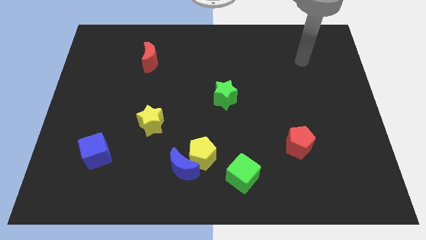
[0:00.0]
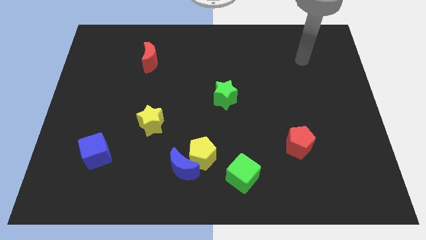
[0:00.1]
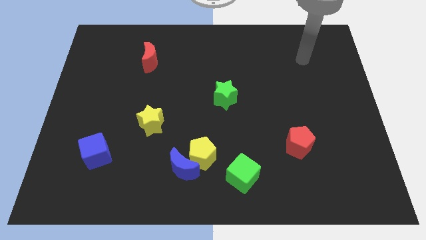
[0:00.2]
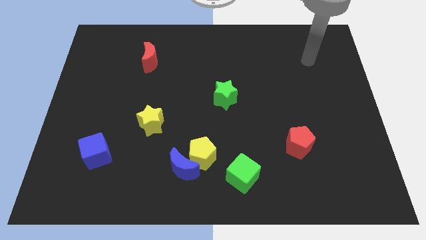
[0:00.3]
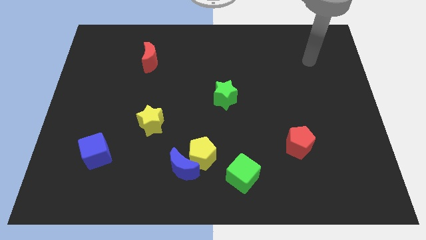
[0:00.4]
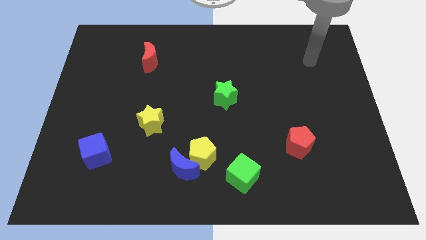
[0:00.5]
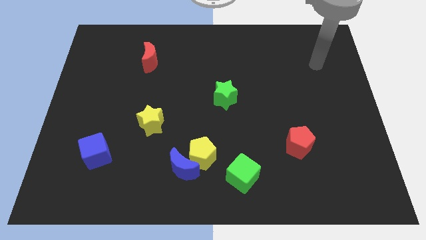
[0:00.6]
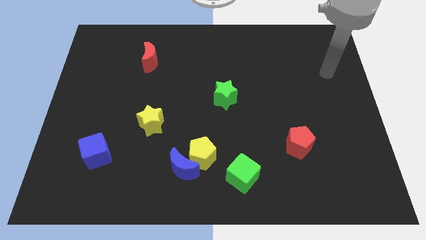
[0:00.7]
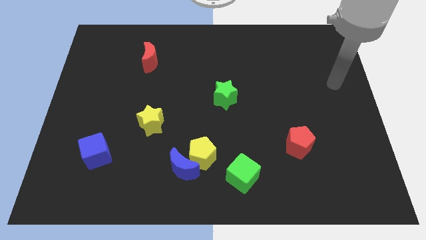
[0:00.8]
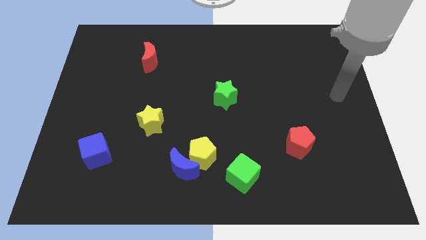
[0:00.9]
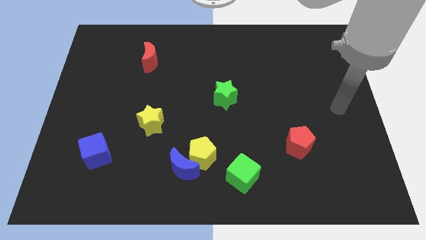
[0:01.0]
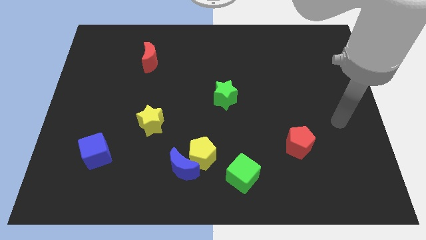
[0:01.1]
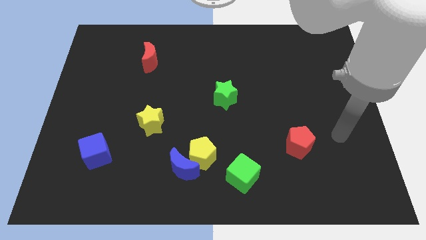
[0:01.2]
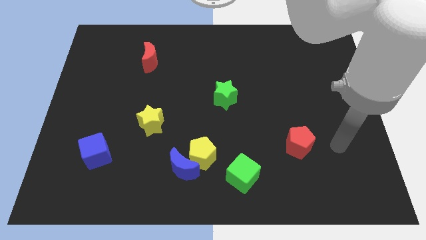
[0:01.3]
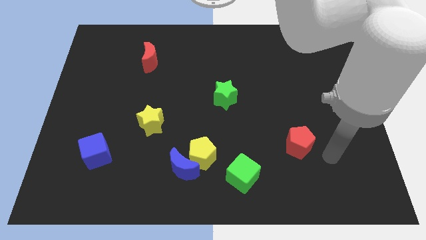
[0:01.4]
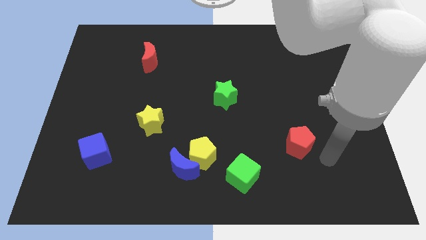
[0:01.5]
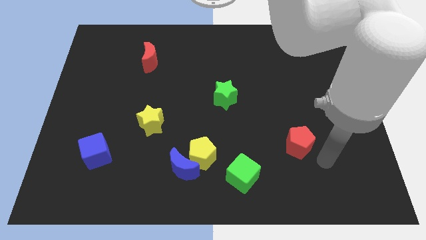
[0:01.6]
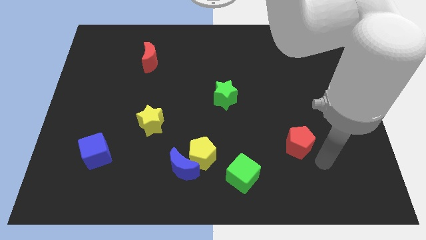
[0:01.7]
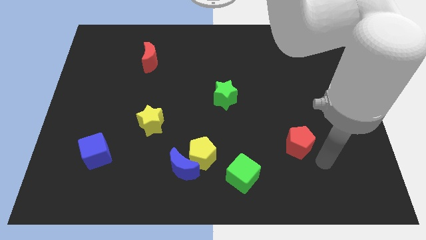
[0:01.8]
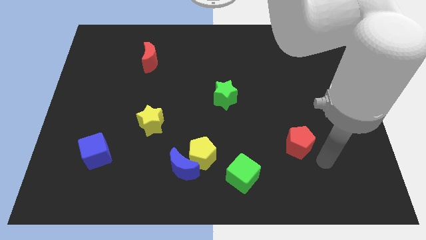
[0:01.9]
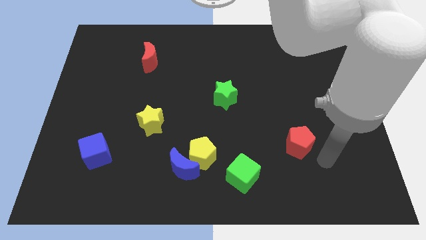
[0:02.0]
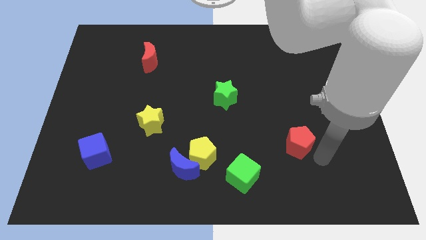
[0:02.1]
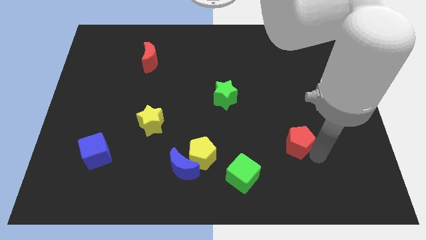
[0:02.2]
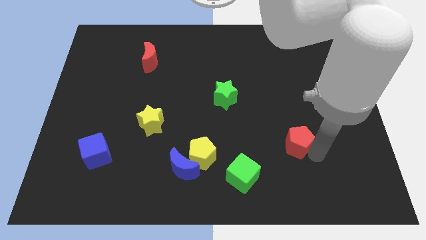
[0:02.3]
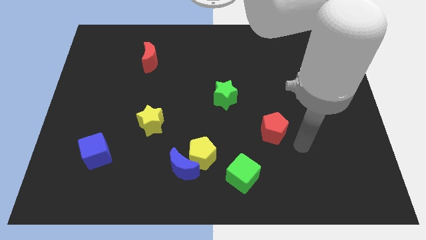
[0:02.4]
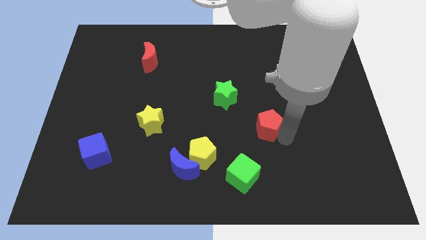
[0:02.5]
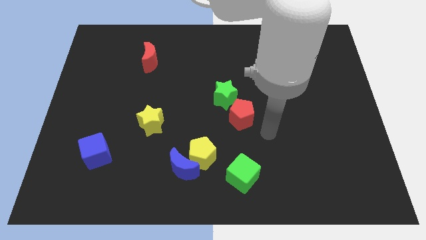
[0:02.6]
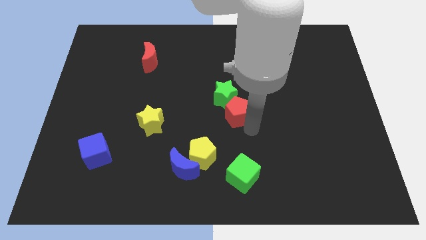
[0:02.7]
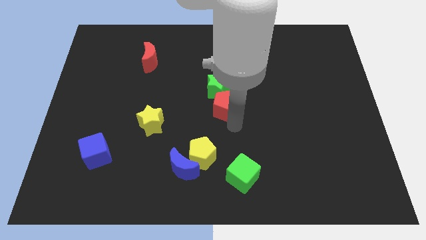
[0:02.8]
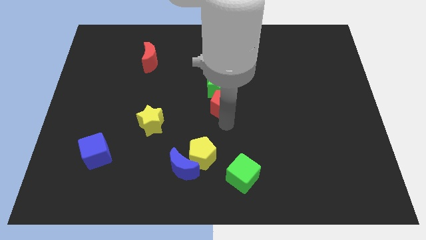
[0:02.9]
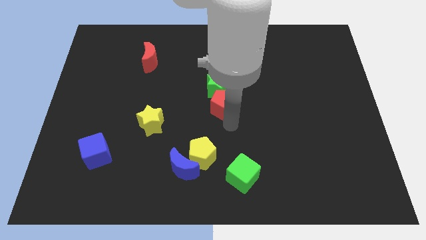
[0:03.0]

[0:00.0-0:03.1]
move the red pentagon close to the bottom of the green star

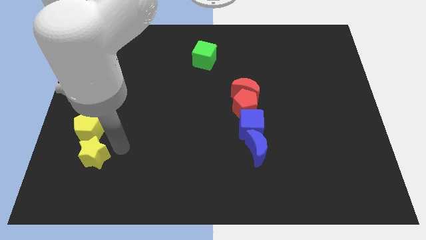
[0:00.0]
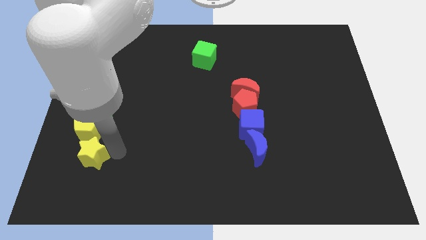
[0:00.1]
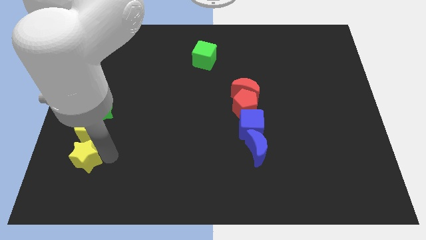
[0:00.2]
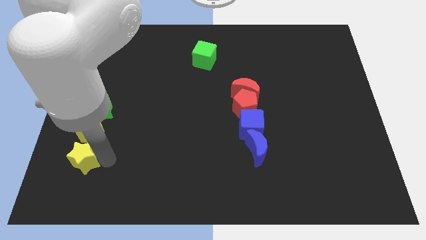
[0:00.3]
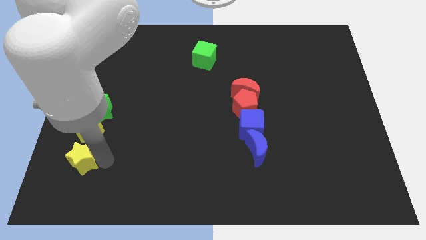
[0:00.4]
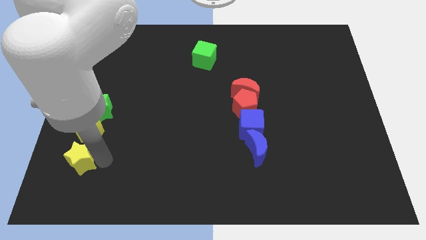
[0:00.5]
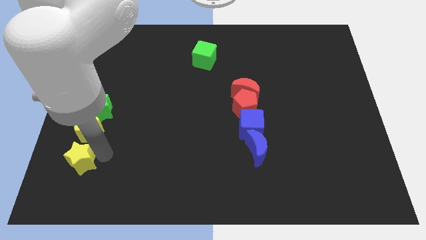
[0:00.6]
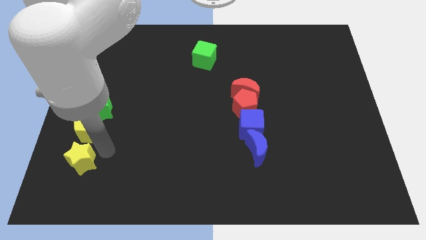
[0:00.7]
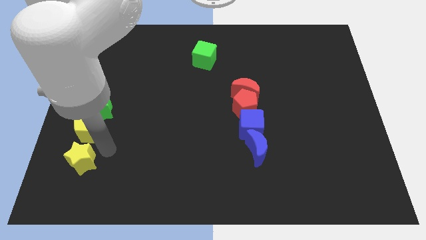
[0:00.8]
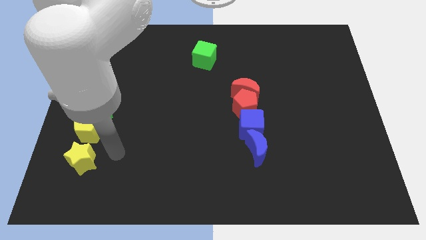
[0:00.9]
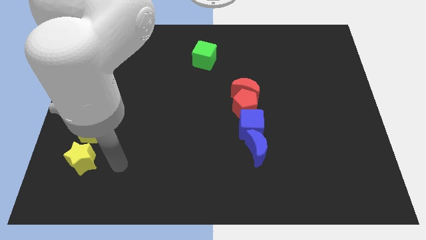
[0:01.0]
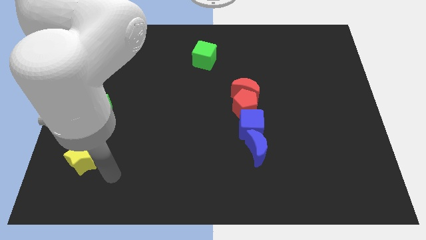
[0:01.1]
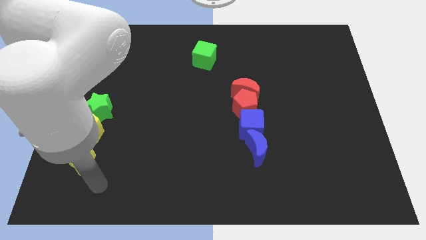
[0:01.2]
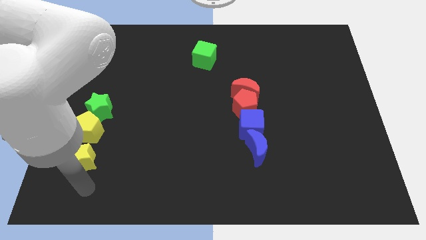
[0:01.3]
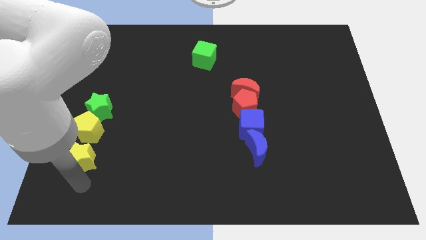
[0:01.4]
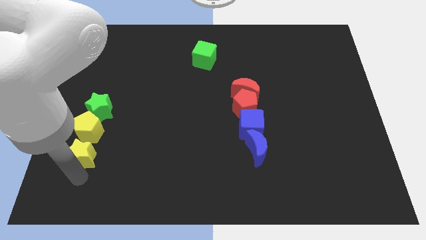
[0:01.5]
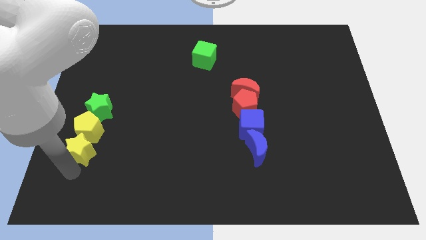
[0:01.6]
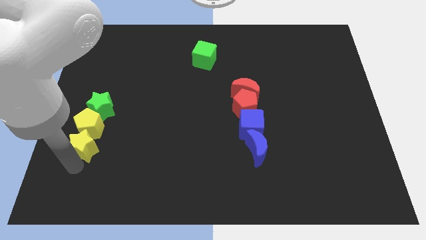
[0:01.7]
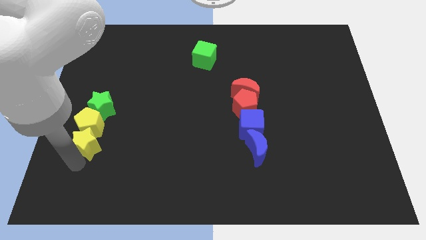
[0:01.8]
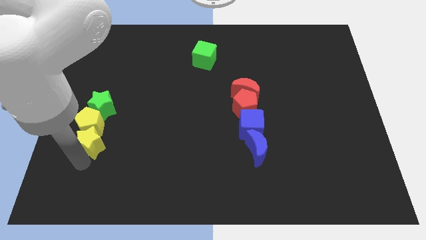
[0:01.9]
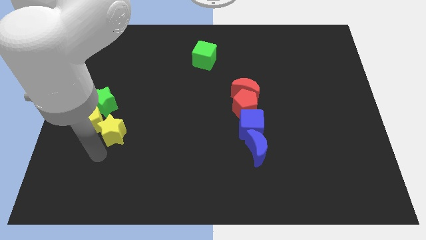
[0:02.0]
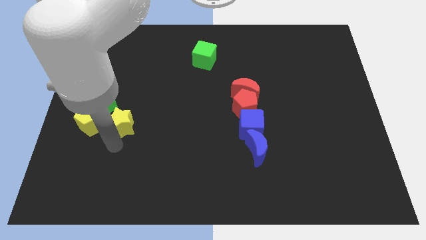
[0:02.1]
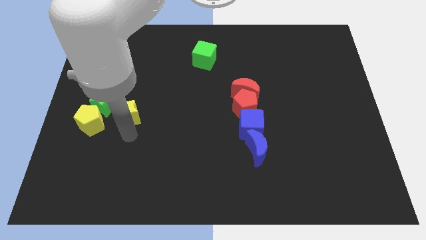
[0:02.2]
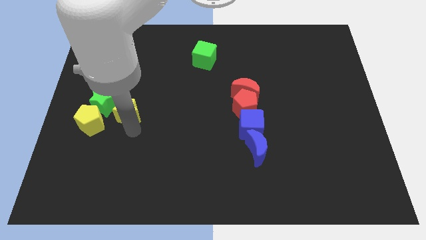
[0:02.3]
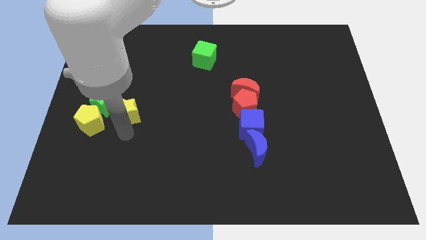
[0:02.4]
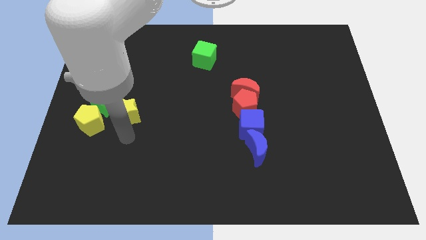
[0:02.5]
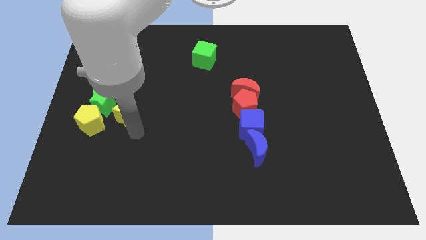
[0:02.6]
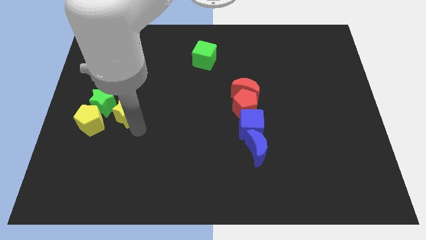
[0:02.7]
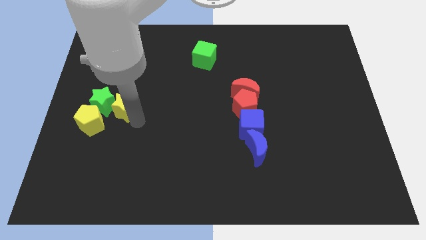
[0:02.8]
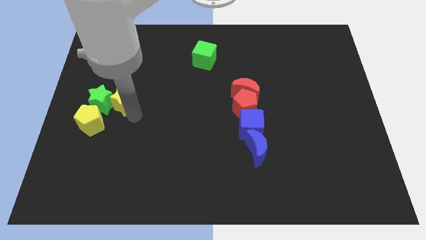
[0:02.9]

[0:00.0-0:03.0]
place the yellow star to the right of the green star

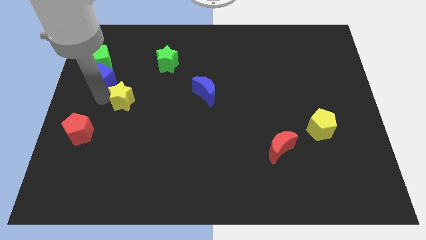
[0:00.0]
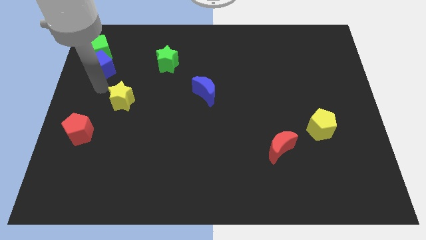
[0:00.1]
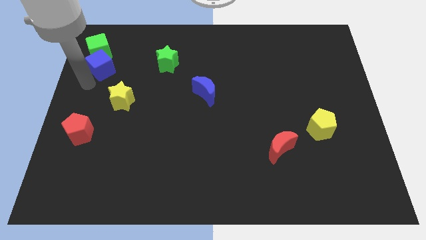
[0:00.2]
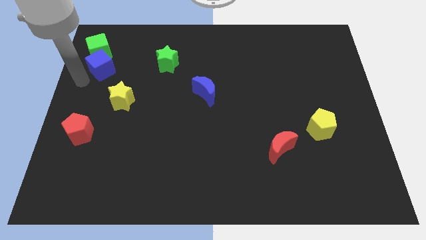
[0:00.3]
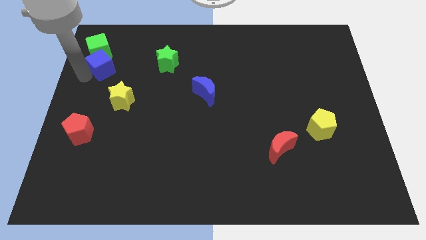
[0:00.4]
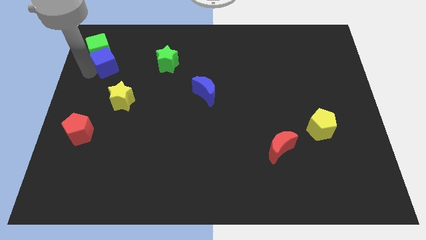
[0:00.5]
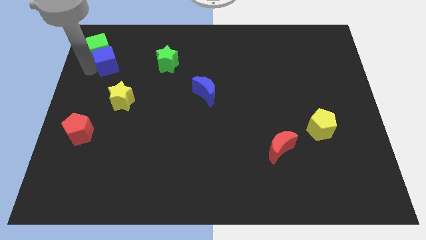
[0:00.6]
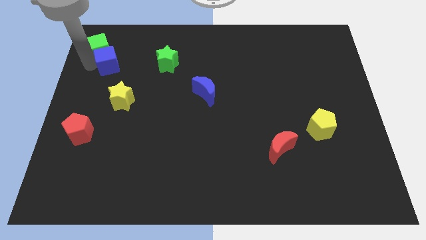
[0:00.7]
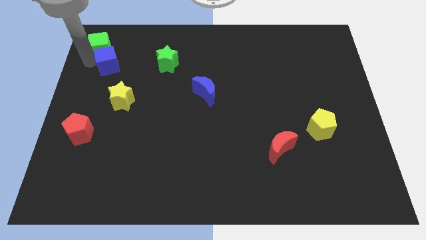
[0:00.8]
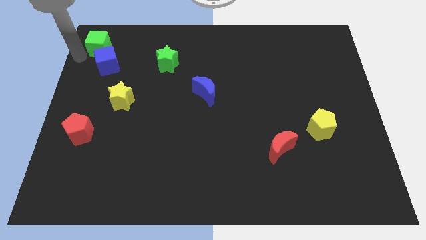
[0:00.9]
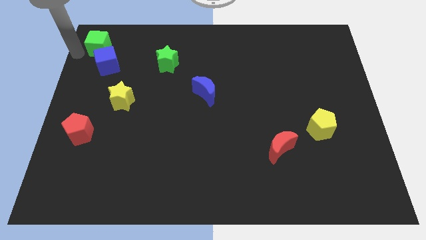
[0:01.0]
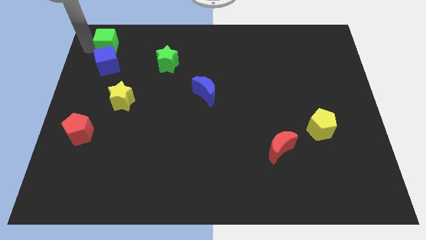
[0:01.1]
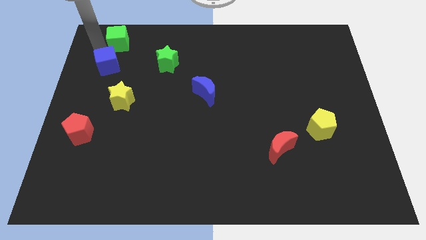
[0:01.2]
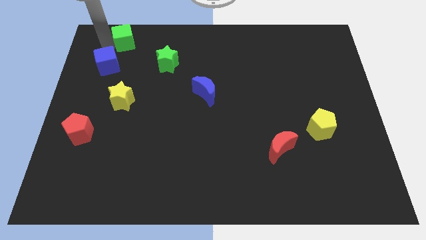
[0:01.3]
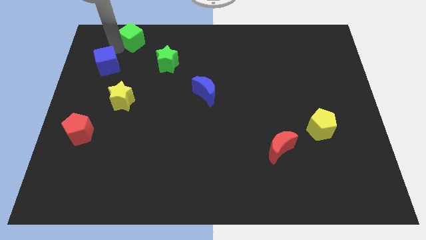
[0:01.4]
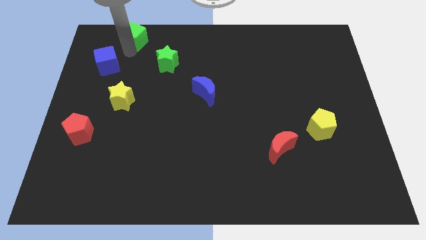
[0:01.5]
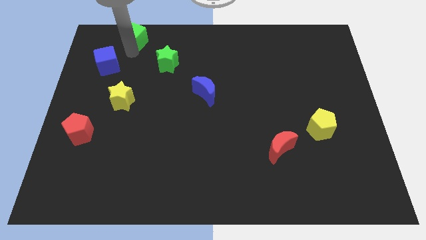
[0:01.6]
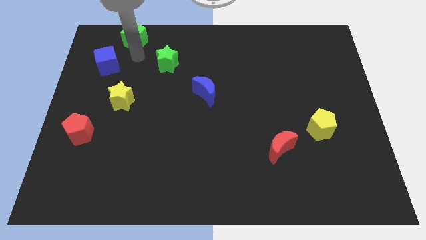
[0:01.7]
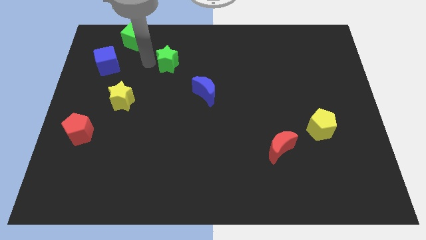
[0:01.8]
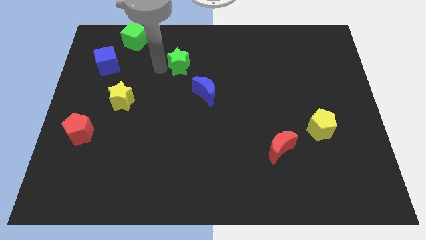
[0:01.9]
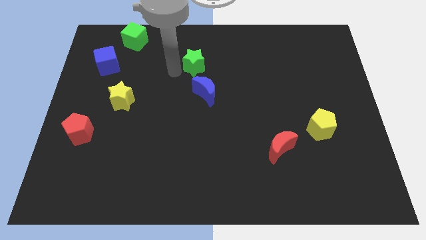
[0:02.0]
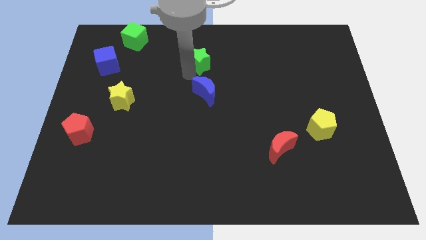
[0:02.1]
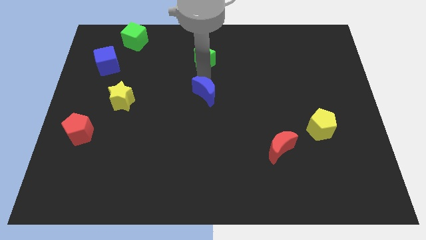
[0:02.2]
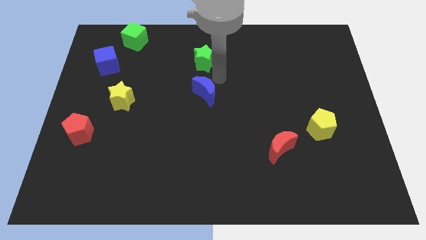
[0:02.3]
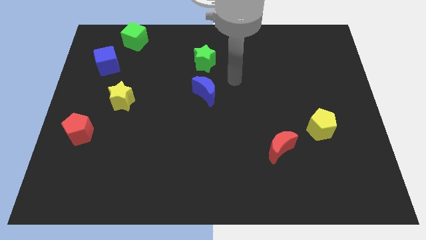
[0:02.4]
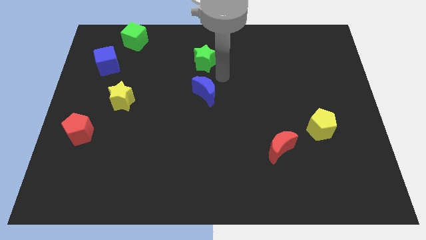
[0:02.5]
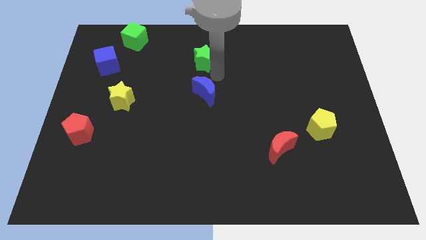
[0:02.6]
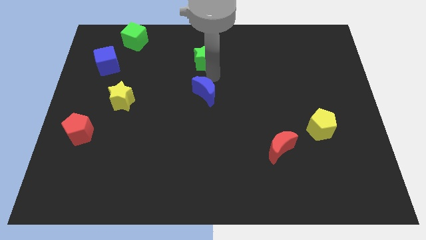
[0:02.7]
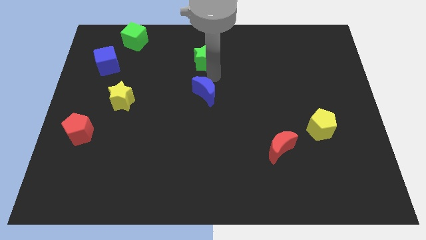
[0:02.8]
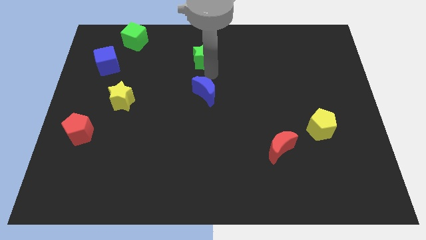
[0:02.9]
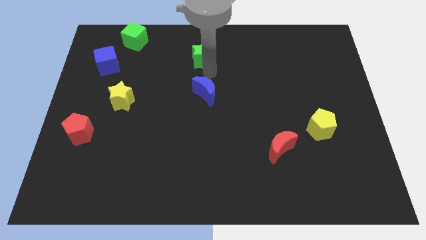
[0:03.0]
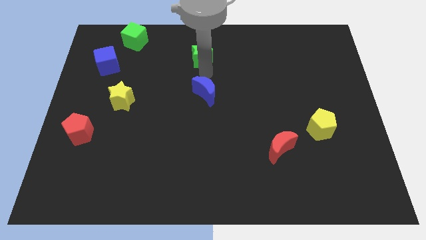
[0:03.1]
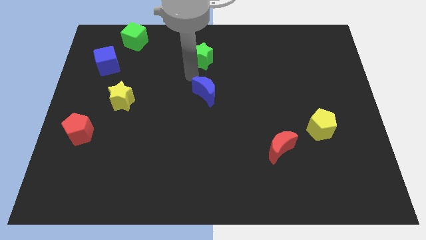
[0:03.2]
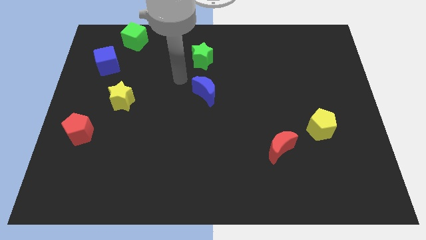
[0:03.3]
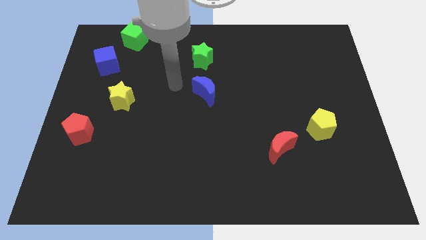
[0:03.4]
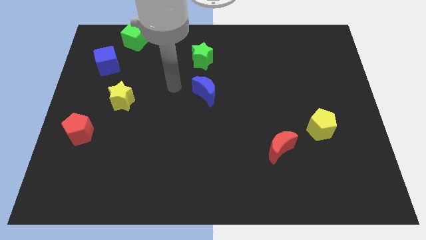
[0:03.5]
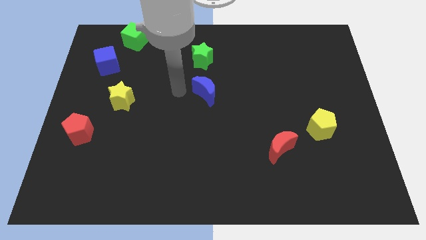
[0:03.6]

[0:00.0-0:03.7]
move the green blocks to the top of the board
